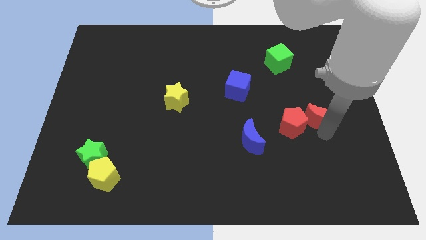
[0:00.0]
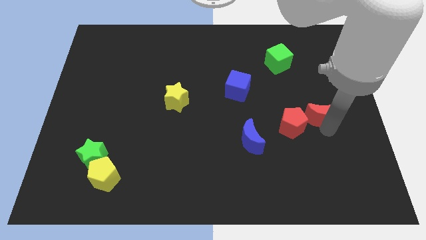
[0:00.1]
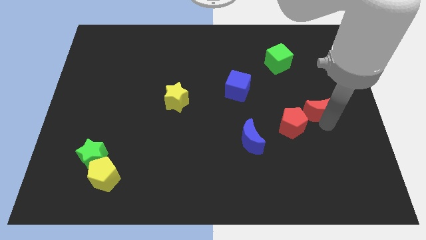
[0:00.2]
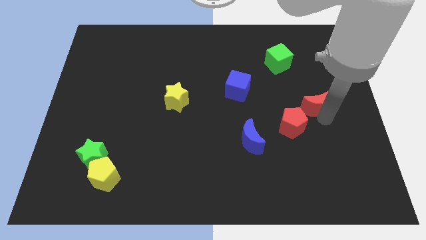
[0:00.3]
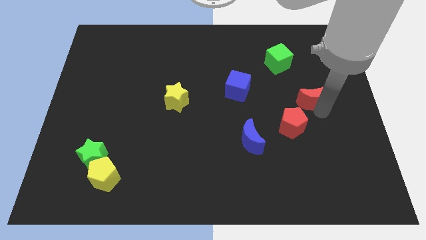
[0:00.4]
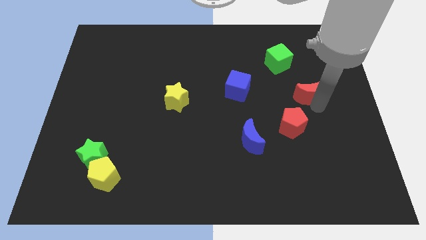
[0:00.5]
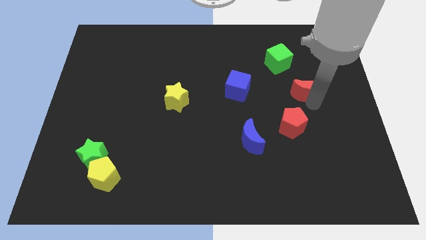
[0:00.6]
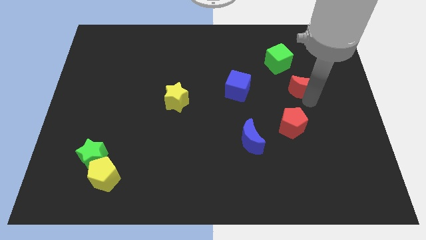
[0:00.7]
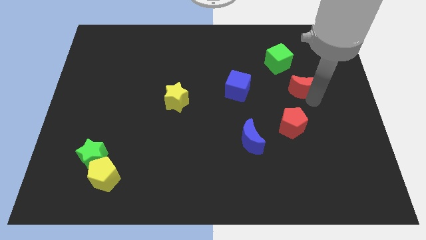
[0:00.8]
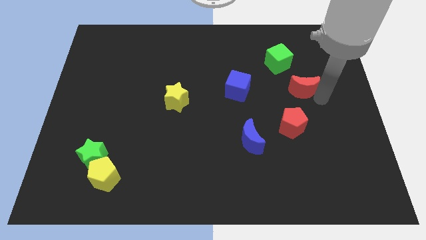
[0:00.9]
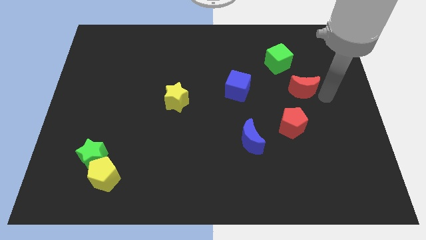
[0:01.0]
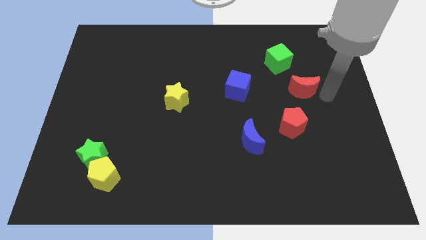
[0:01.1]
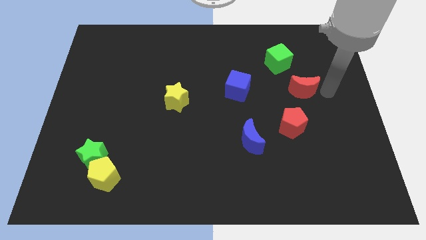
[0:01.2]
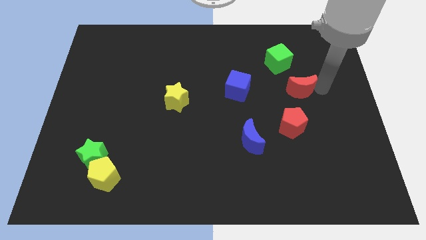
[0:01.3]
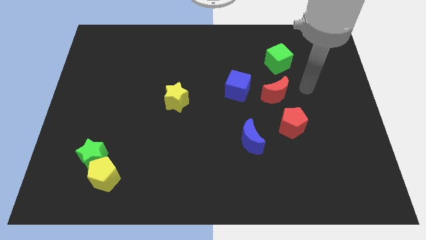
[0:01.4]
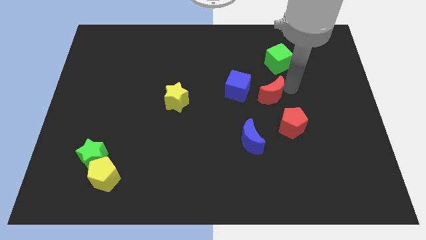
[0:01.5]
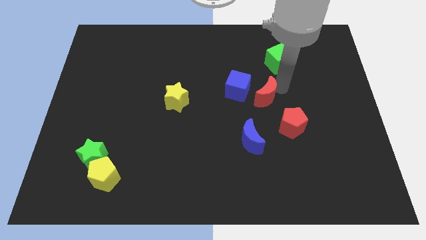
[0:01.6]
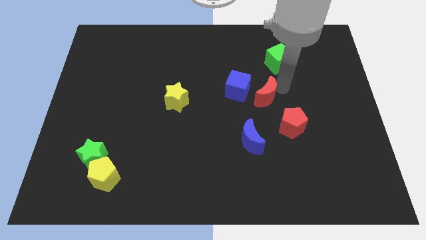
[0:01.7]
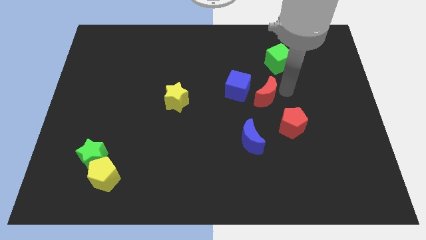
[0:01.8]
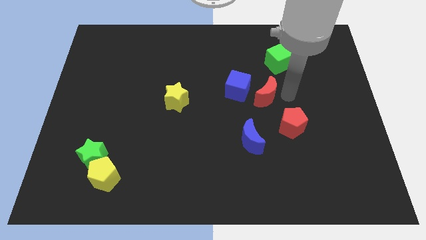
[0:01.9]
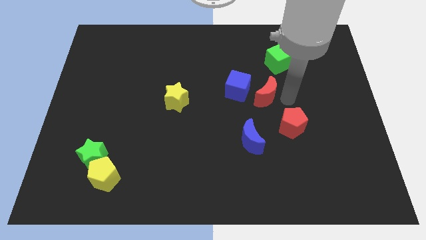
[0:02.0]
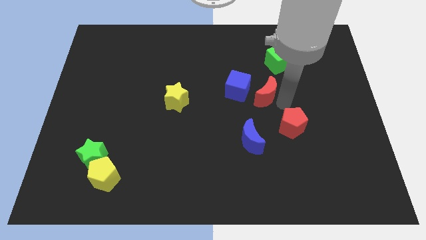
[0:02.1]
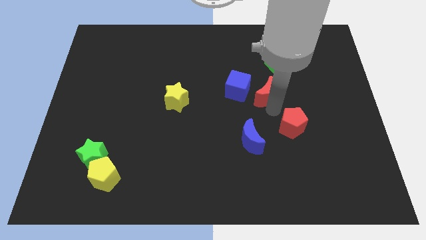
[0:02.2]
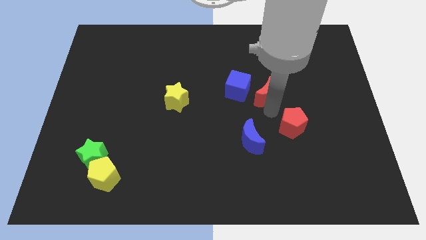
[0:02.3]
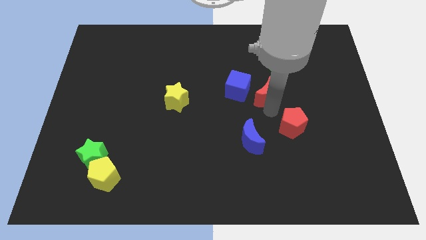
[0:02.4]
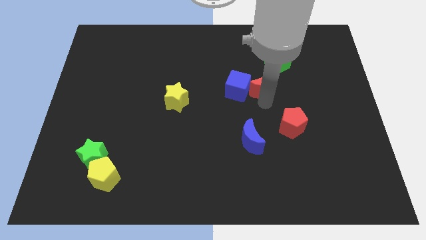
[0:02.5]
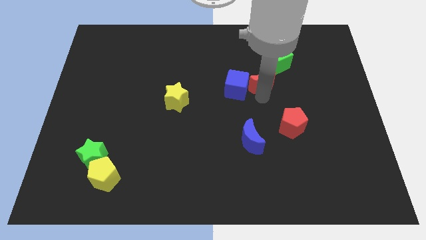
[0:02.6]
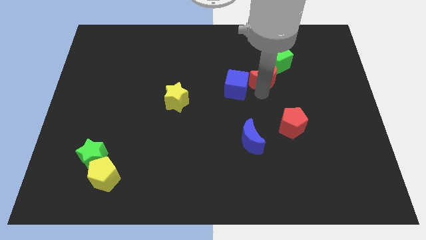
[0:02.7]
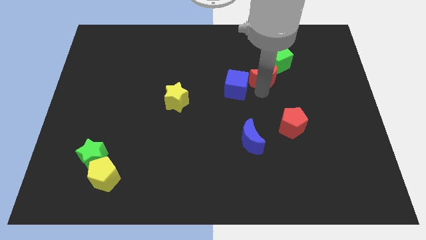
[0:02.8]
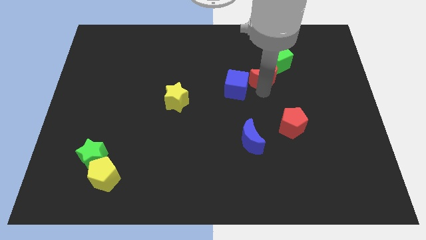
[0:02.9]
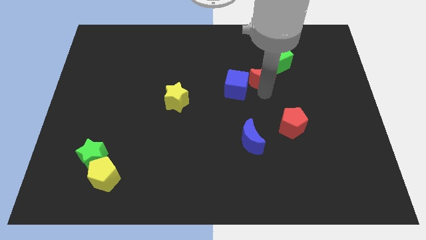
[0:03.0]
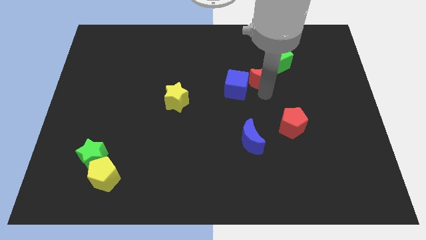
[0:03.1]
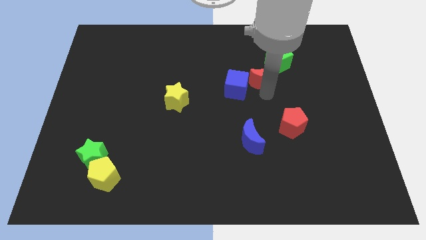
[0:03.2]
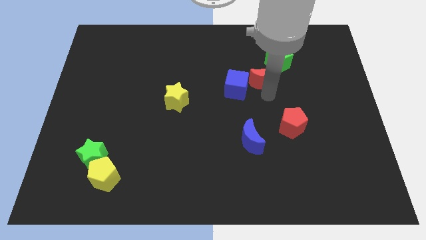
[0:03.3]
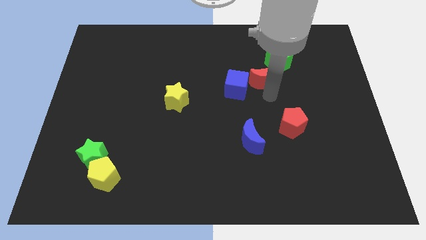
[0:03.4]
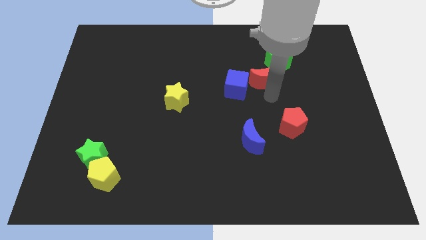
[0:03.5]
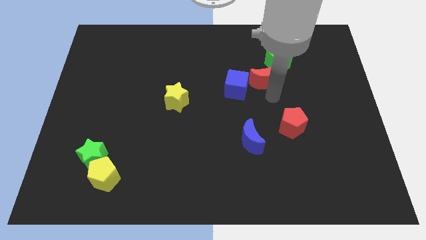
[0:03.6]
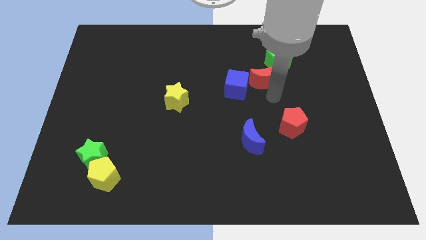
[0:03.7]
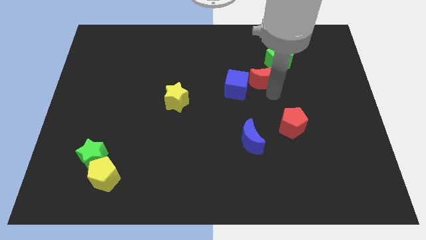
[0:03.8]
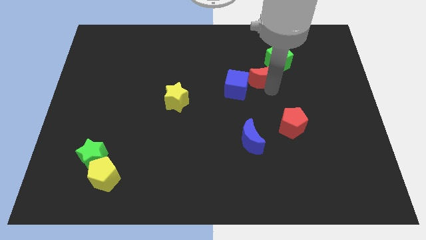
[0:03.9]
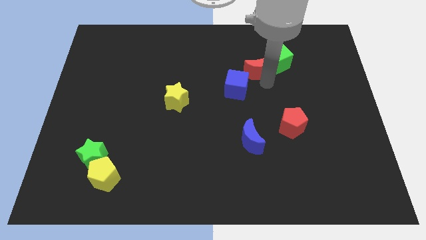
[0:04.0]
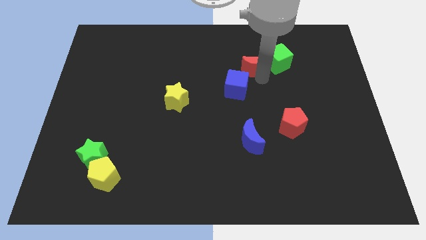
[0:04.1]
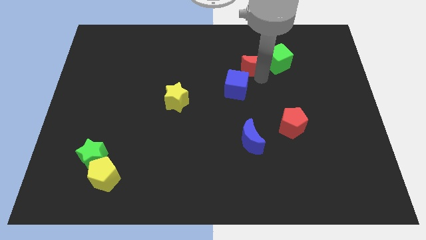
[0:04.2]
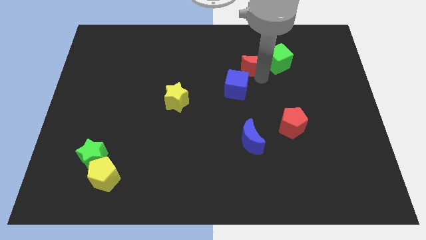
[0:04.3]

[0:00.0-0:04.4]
place the red crescent in between blue cube and green cube

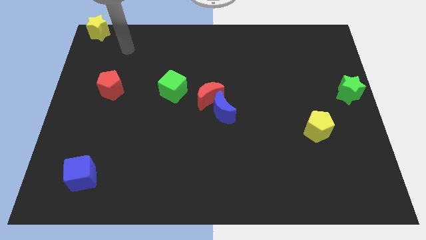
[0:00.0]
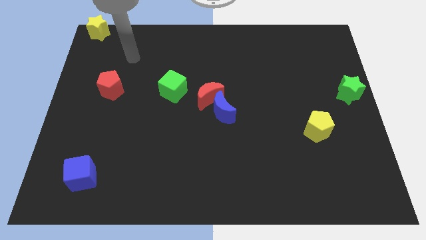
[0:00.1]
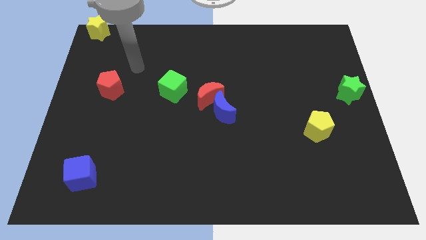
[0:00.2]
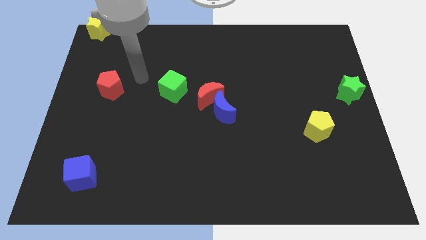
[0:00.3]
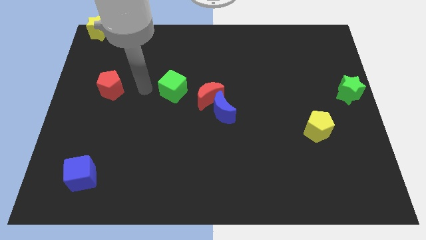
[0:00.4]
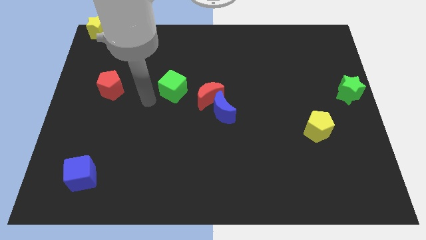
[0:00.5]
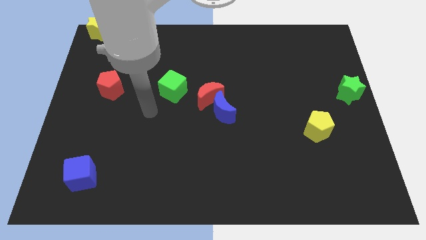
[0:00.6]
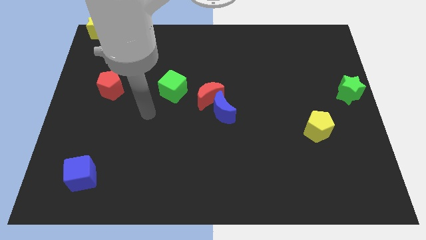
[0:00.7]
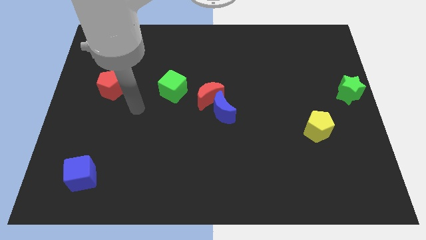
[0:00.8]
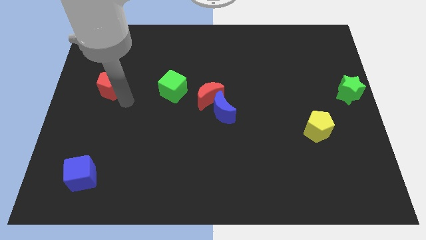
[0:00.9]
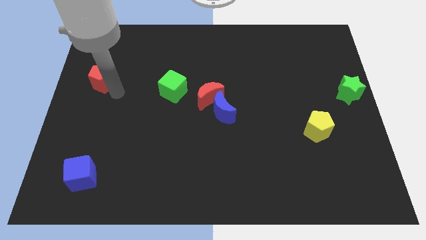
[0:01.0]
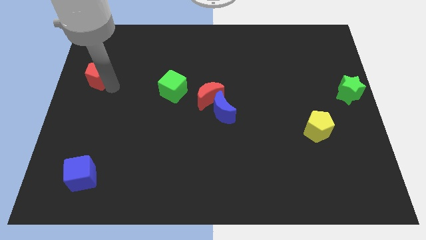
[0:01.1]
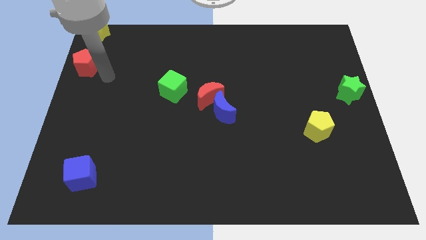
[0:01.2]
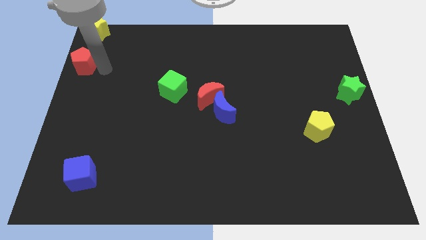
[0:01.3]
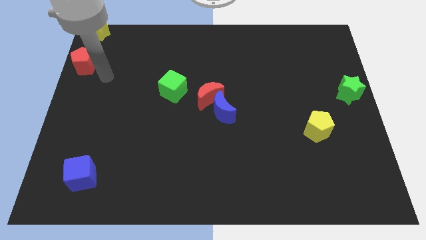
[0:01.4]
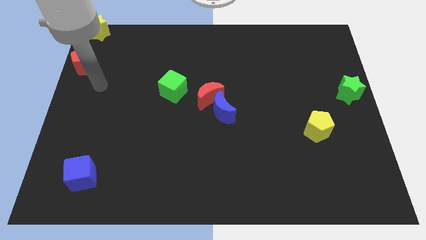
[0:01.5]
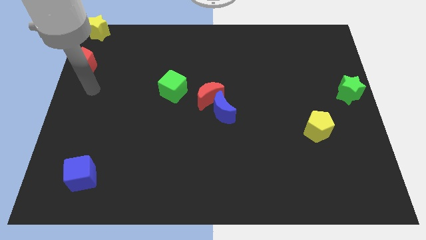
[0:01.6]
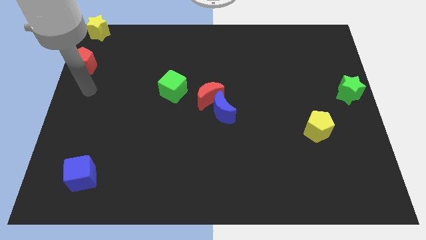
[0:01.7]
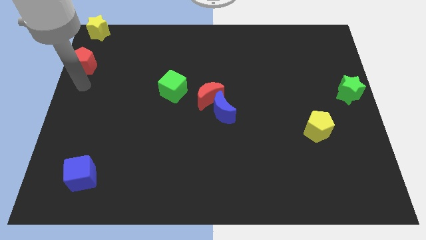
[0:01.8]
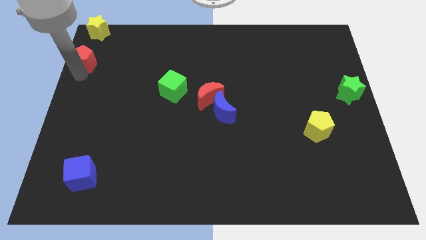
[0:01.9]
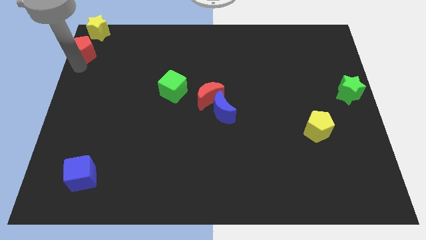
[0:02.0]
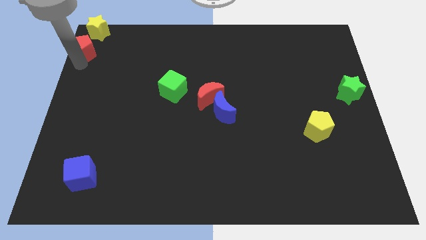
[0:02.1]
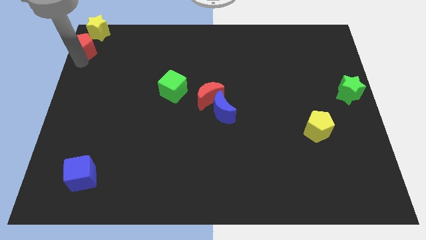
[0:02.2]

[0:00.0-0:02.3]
move the red pentagon close to the yellow star

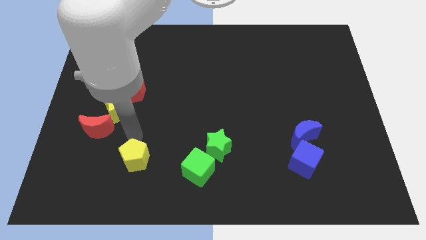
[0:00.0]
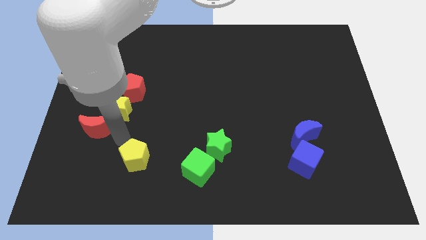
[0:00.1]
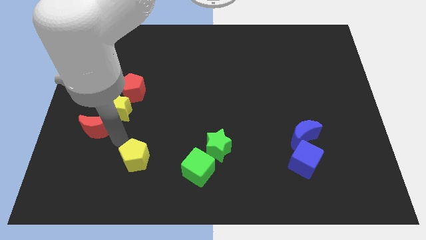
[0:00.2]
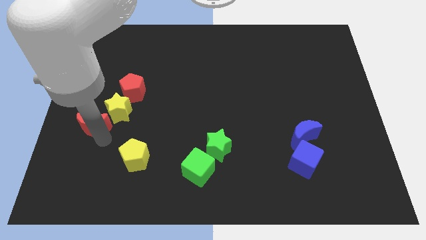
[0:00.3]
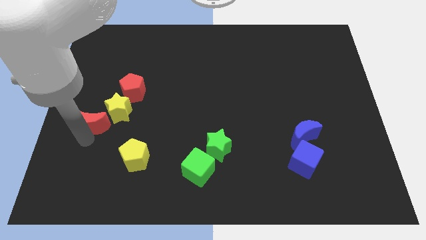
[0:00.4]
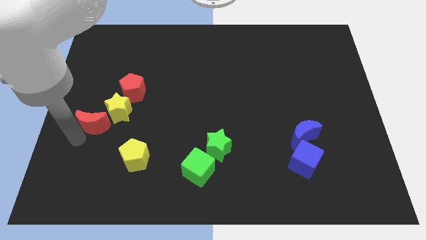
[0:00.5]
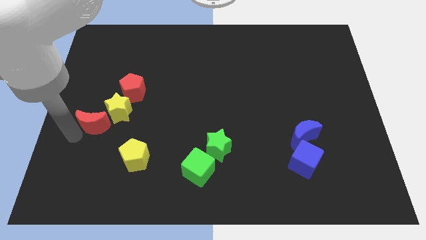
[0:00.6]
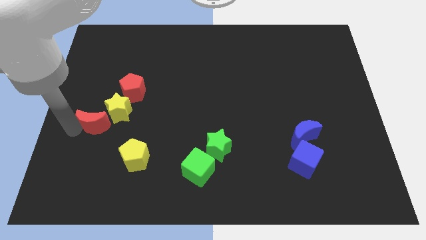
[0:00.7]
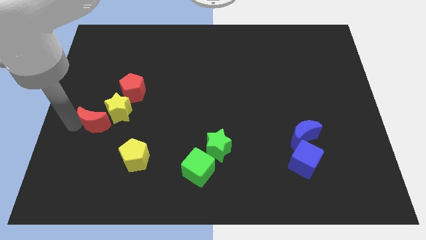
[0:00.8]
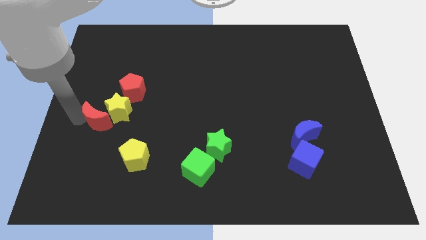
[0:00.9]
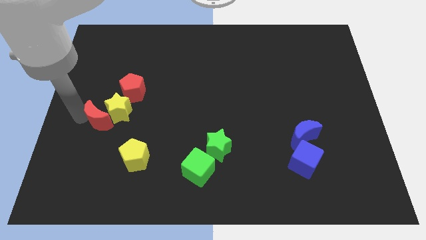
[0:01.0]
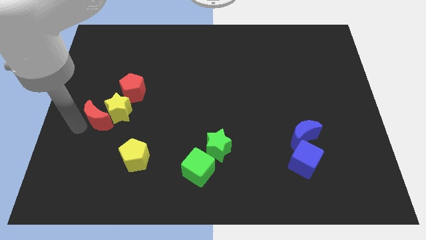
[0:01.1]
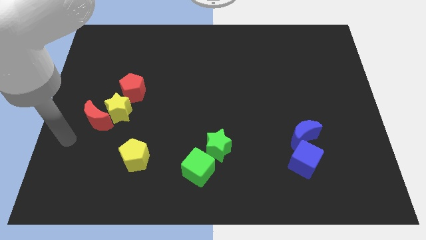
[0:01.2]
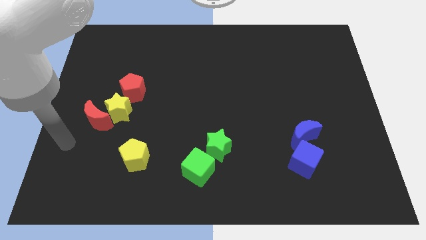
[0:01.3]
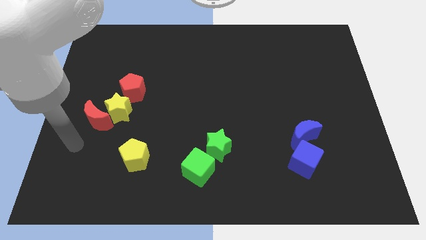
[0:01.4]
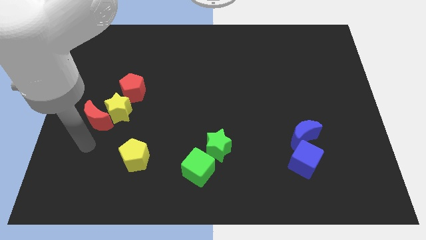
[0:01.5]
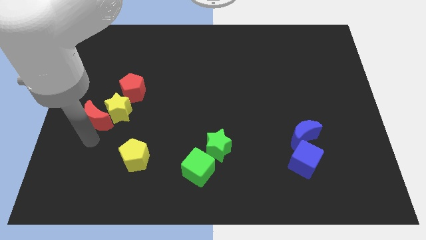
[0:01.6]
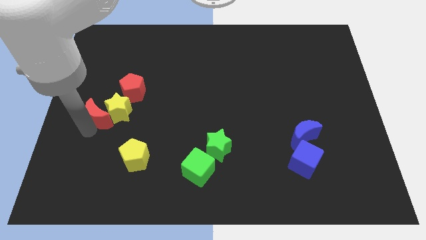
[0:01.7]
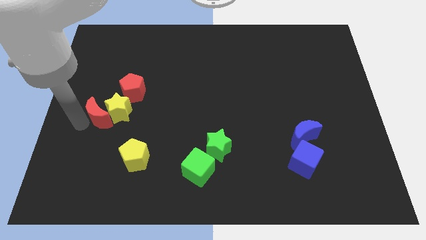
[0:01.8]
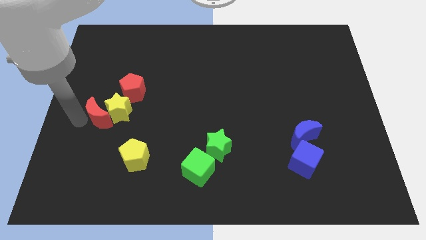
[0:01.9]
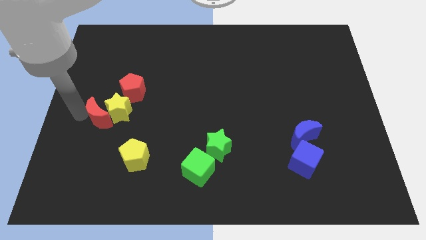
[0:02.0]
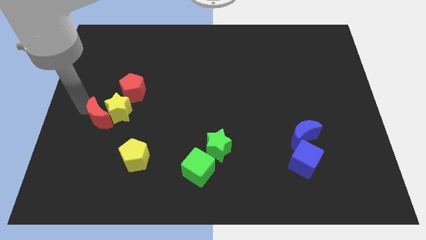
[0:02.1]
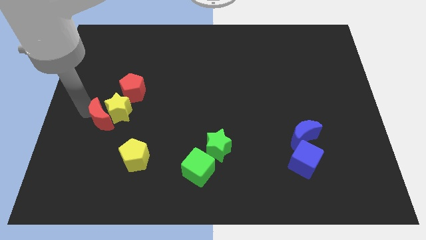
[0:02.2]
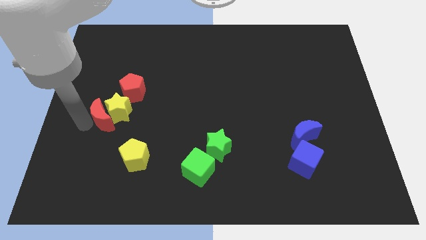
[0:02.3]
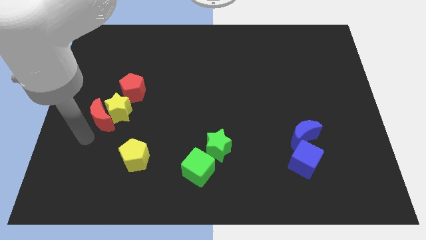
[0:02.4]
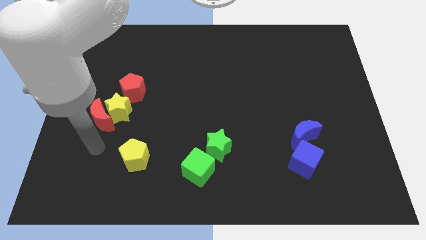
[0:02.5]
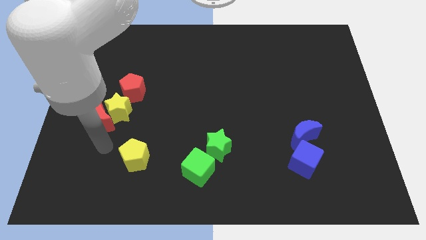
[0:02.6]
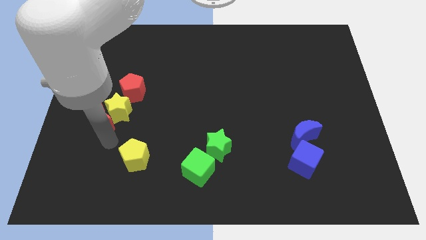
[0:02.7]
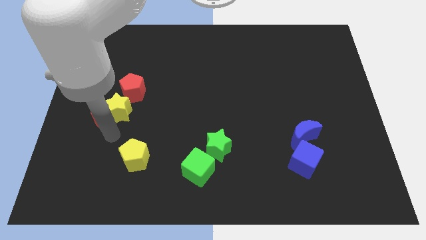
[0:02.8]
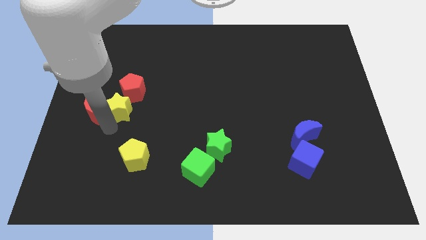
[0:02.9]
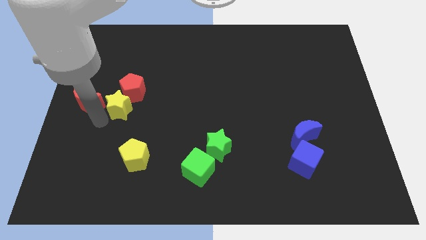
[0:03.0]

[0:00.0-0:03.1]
place the red crescent at the left side of the yellow star
